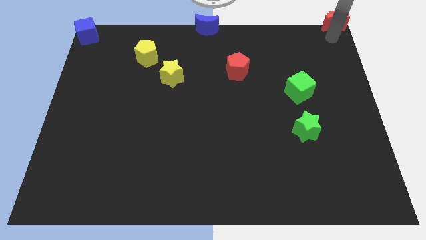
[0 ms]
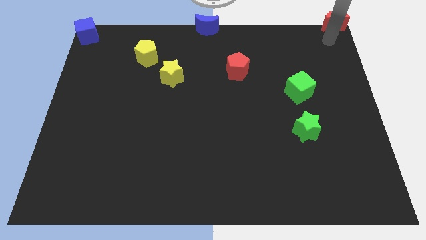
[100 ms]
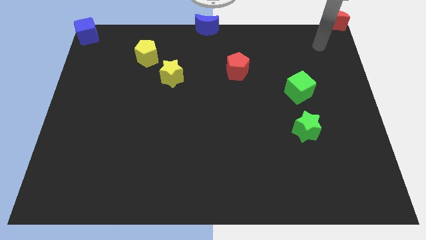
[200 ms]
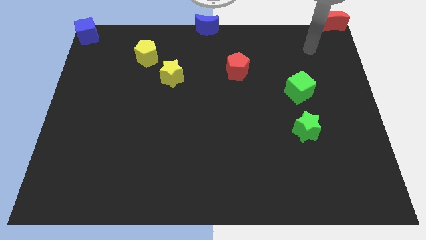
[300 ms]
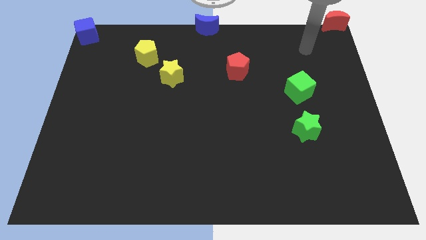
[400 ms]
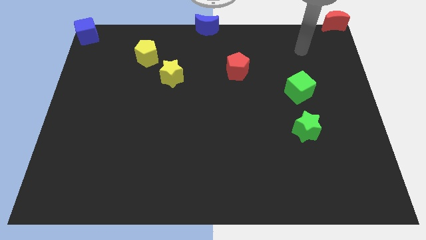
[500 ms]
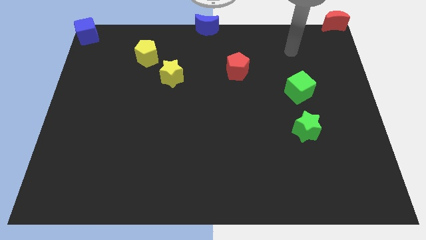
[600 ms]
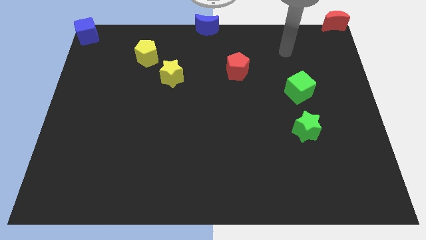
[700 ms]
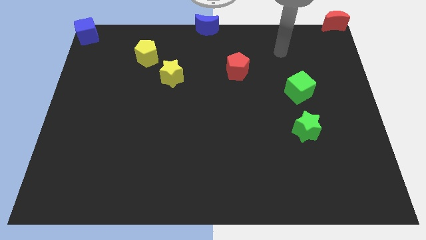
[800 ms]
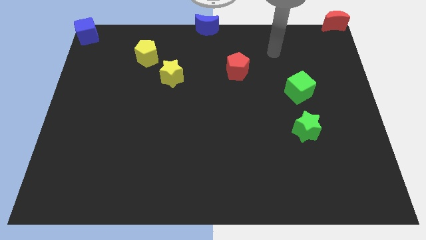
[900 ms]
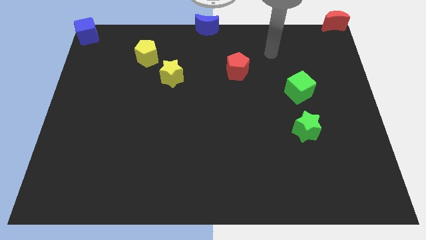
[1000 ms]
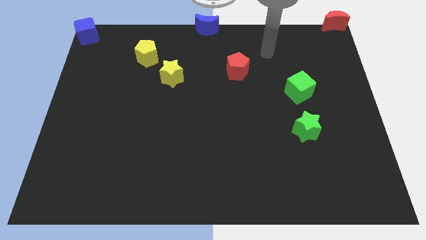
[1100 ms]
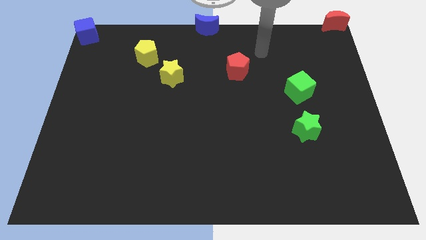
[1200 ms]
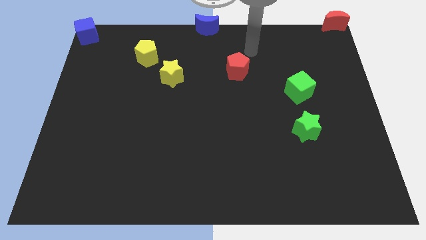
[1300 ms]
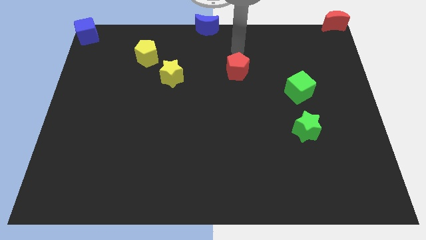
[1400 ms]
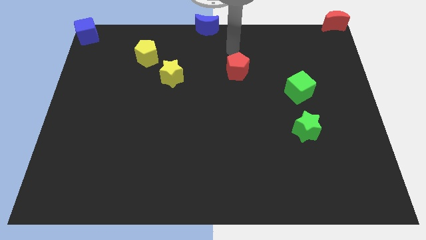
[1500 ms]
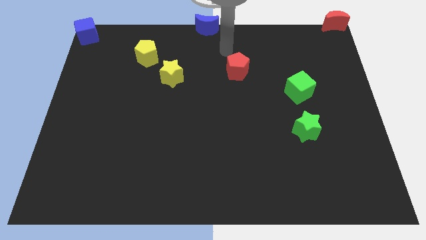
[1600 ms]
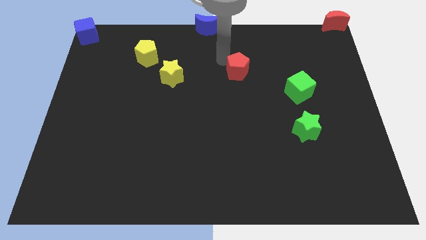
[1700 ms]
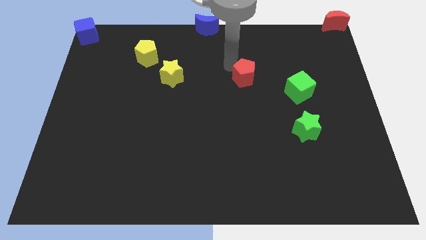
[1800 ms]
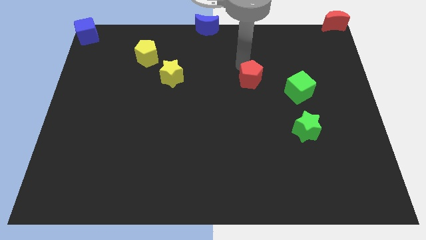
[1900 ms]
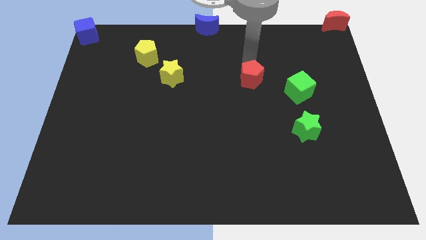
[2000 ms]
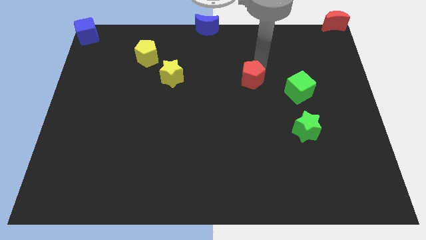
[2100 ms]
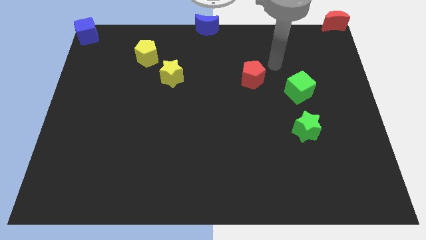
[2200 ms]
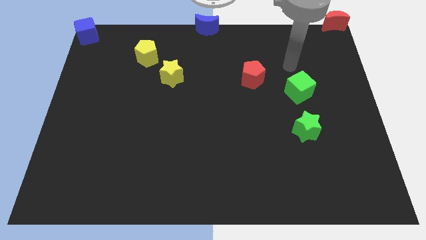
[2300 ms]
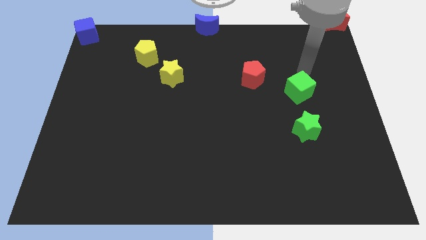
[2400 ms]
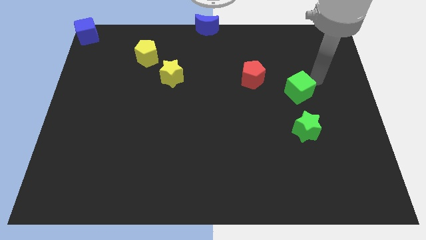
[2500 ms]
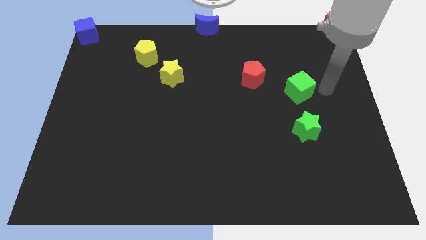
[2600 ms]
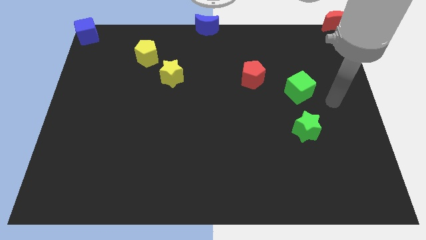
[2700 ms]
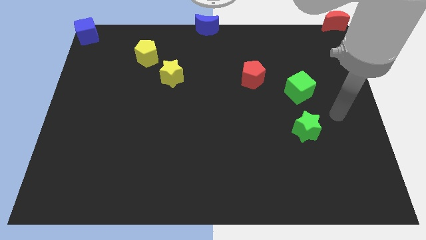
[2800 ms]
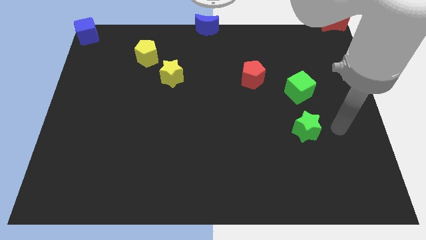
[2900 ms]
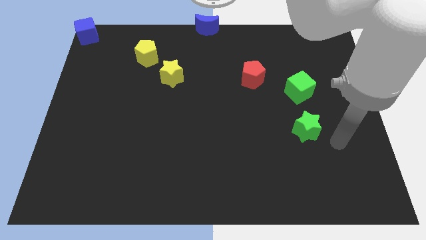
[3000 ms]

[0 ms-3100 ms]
move the arm towards the green star

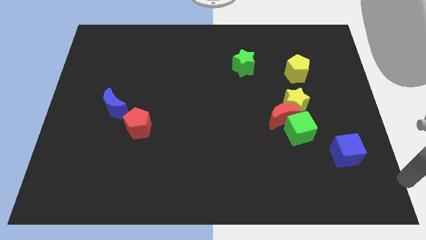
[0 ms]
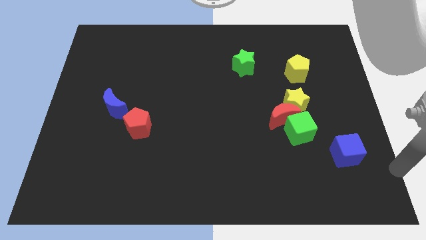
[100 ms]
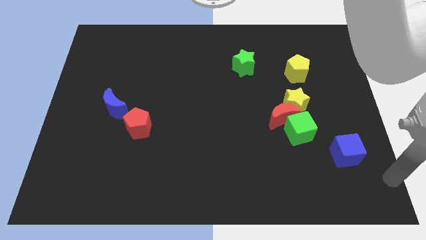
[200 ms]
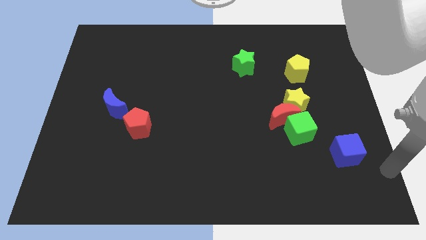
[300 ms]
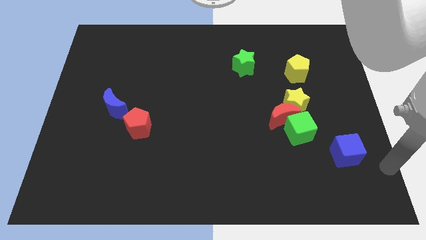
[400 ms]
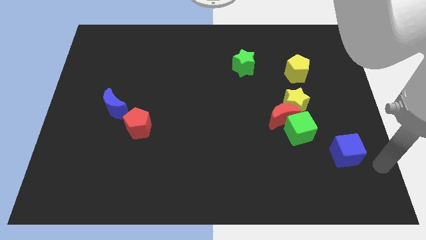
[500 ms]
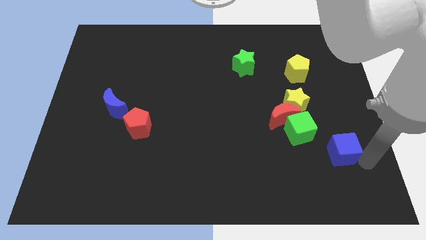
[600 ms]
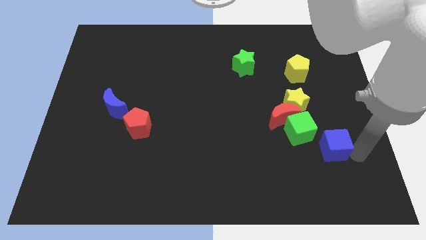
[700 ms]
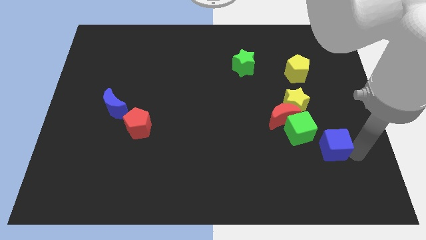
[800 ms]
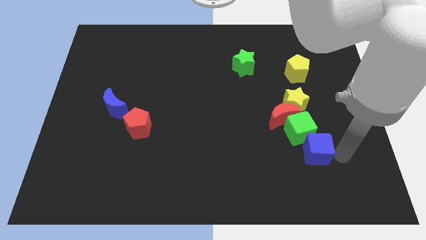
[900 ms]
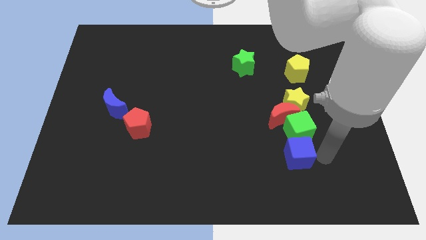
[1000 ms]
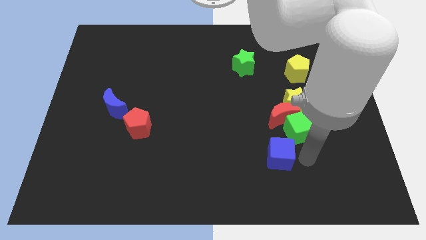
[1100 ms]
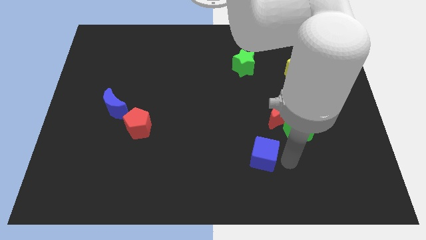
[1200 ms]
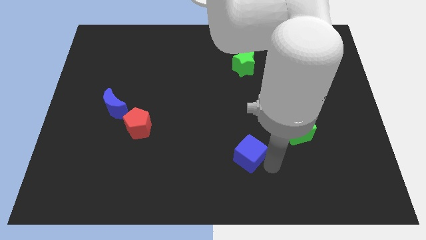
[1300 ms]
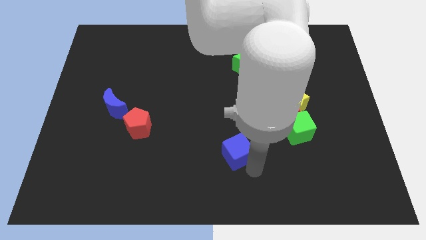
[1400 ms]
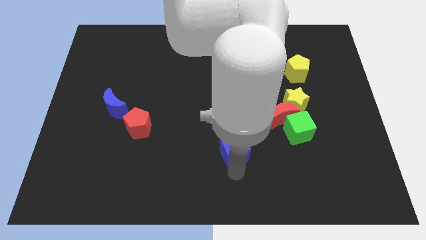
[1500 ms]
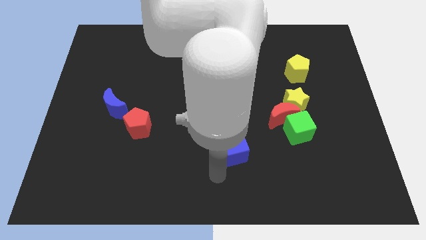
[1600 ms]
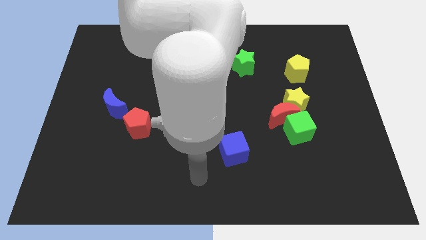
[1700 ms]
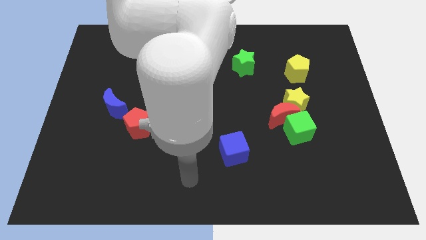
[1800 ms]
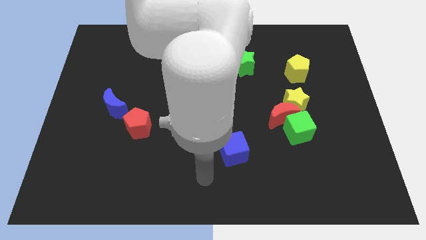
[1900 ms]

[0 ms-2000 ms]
push the blue cube towards the left of the board

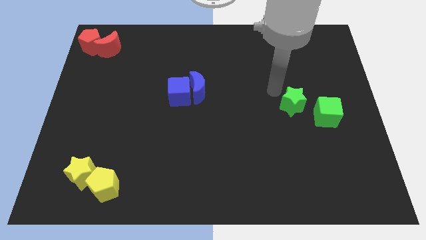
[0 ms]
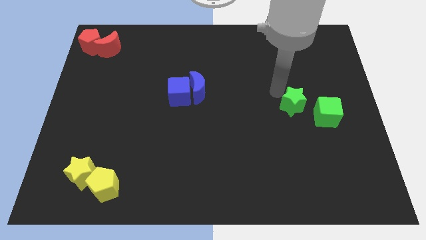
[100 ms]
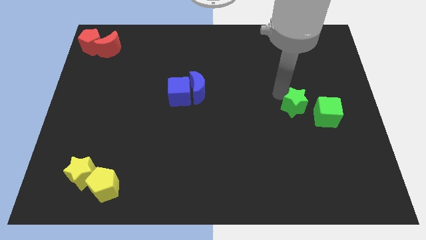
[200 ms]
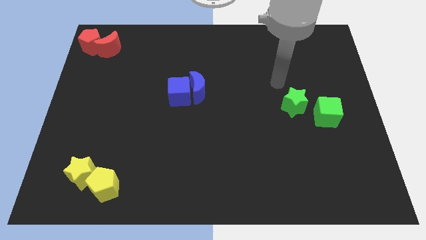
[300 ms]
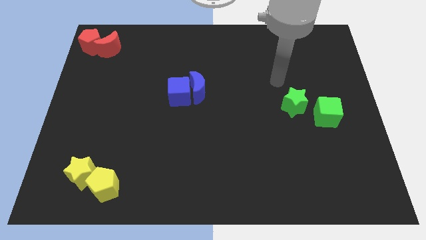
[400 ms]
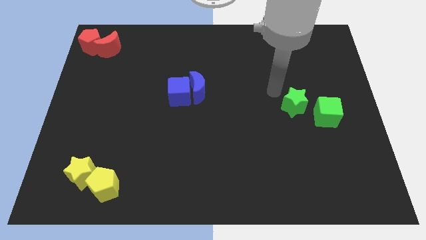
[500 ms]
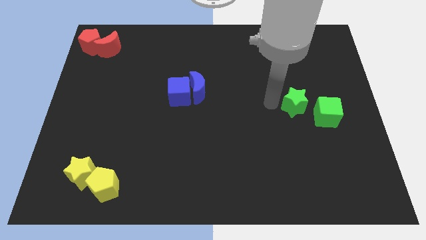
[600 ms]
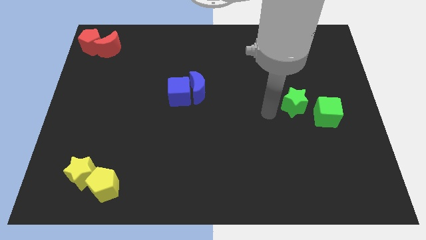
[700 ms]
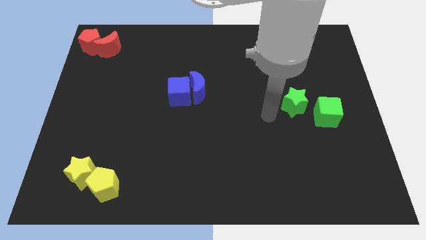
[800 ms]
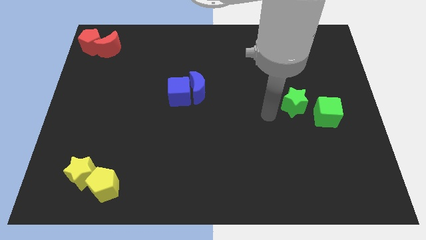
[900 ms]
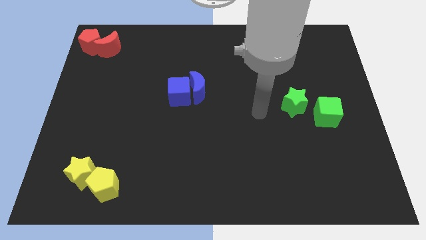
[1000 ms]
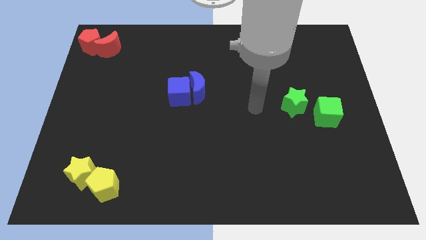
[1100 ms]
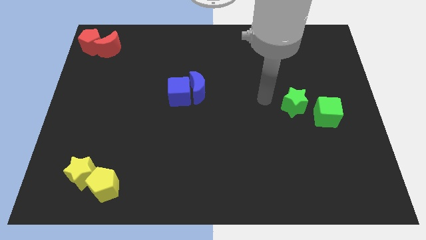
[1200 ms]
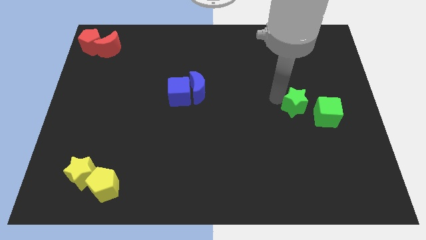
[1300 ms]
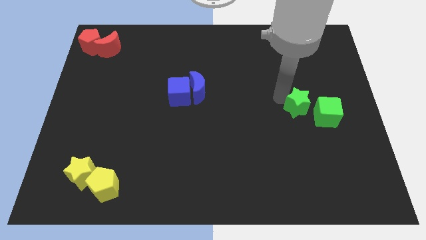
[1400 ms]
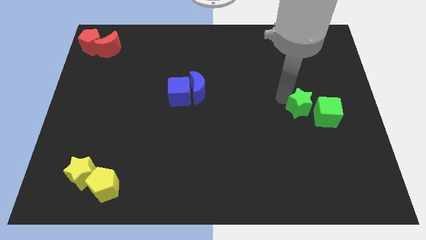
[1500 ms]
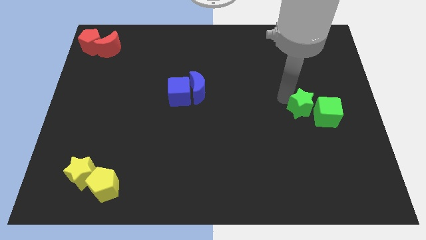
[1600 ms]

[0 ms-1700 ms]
slightly push the green star towards the green cube

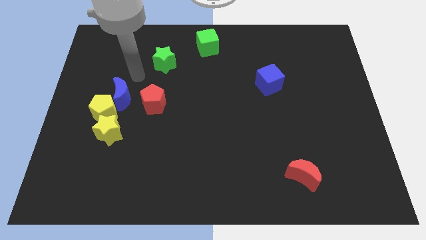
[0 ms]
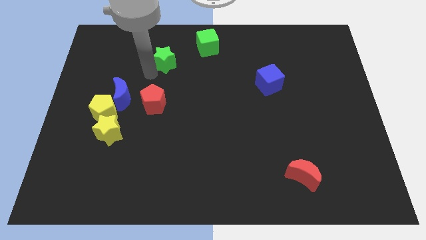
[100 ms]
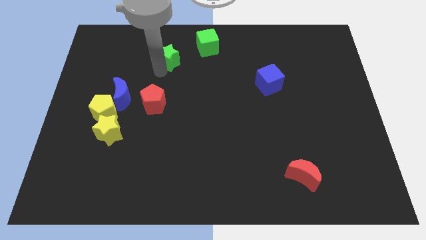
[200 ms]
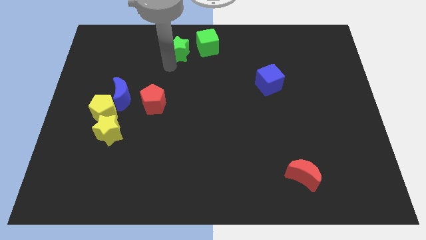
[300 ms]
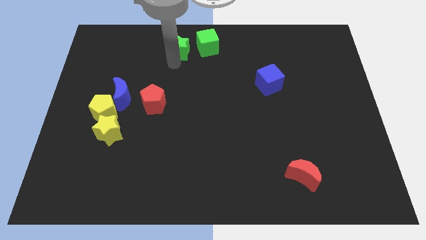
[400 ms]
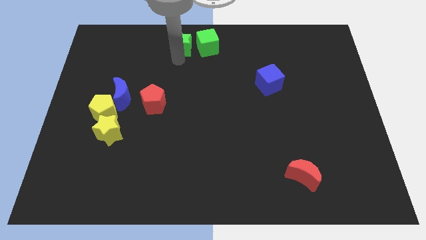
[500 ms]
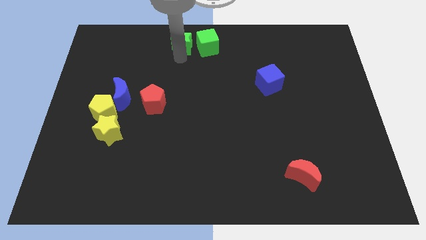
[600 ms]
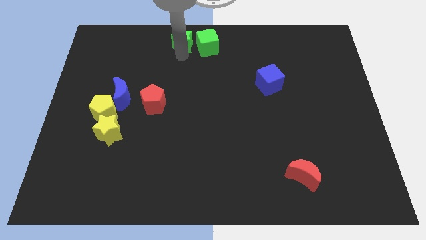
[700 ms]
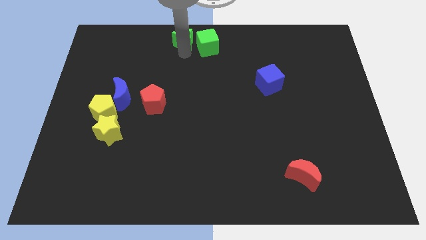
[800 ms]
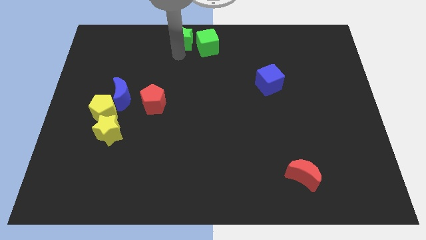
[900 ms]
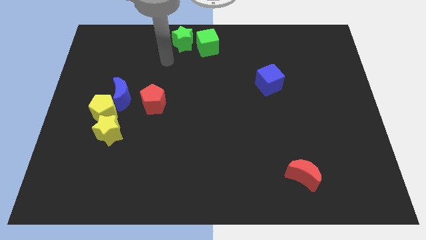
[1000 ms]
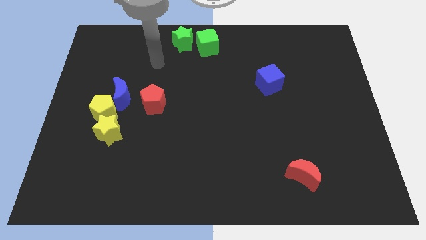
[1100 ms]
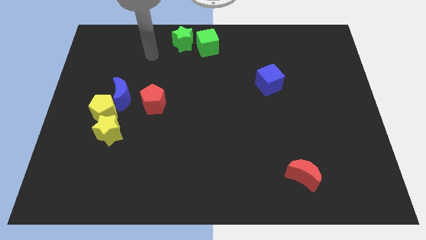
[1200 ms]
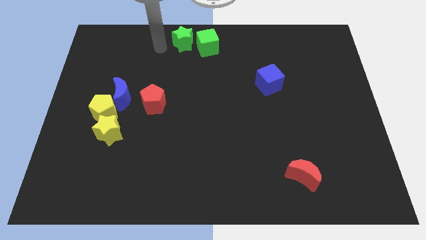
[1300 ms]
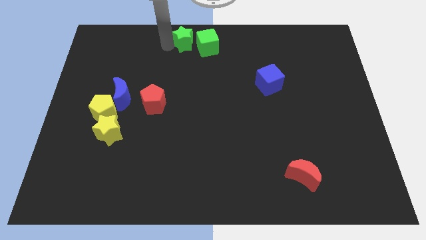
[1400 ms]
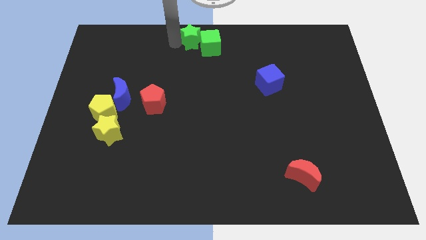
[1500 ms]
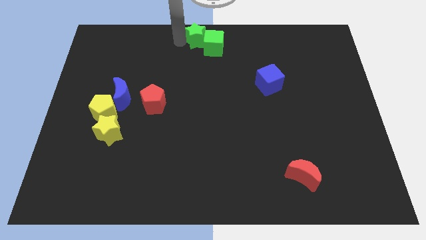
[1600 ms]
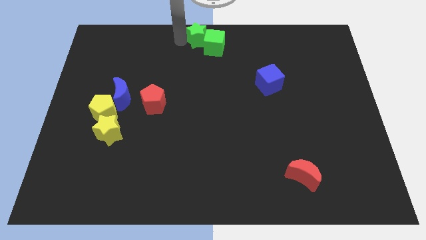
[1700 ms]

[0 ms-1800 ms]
move the green star into the green cube

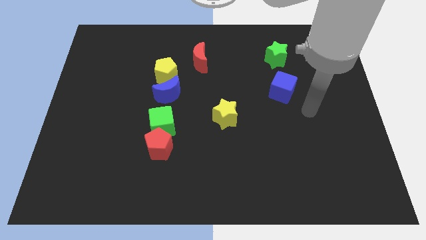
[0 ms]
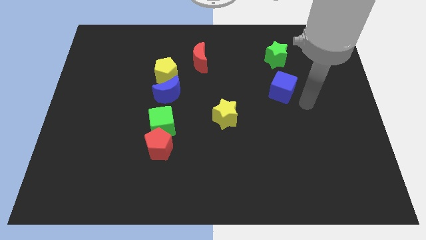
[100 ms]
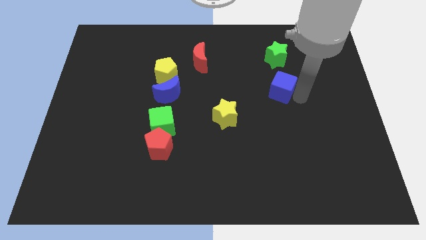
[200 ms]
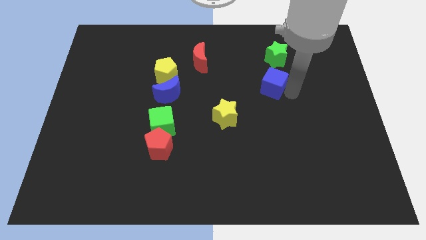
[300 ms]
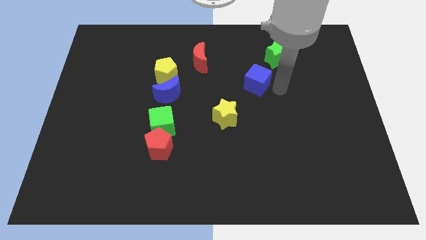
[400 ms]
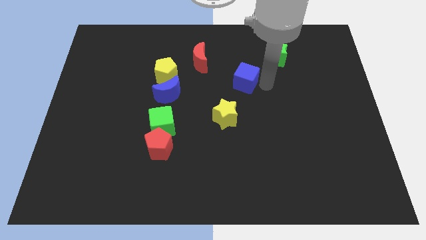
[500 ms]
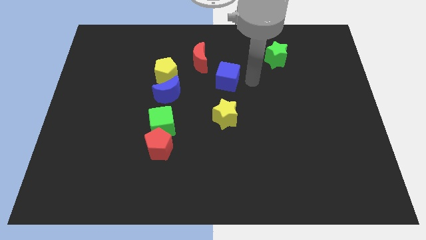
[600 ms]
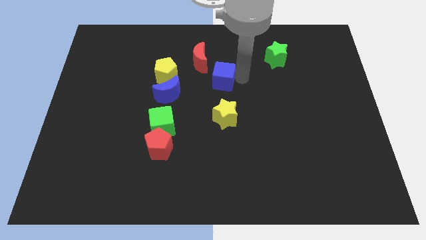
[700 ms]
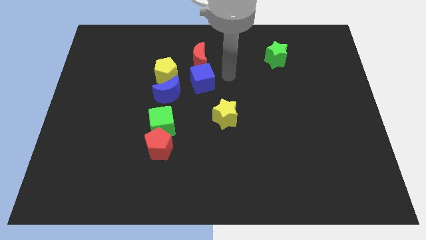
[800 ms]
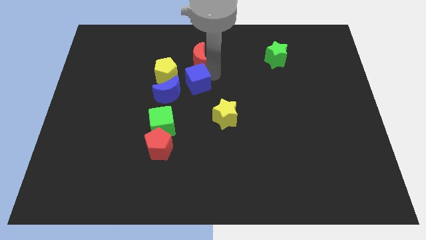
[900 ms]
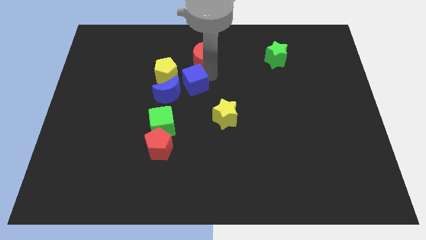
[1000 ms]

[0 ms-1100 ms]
push blue cube towards blue moon
